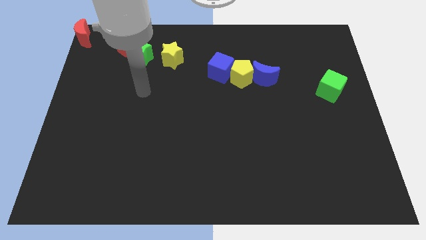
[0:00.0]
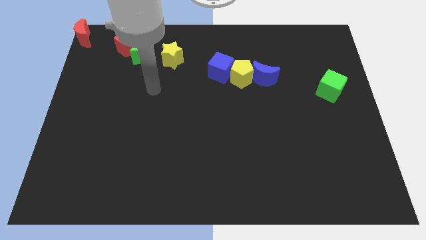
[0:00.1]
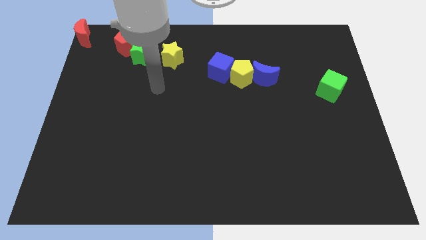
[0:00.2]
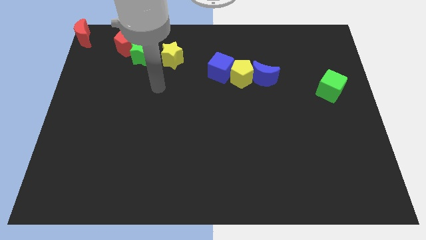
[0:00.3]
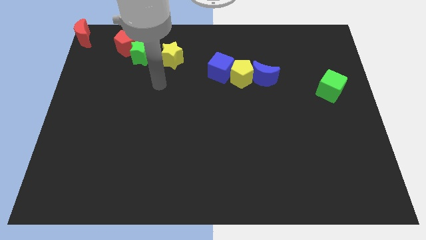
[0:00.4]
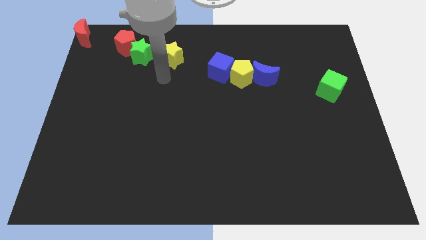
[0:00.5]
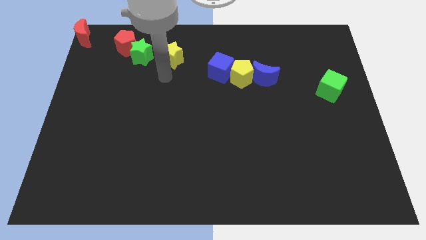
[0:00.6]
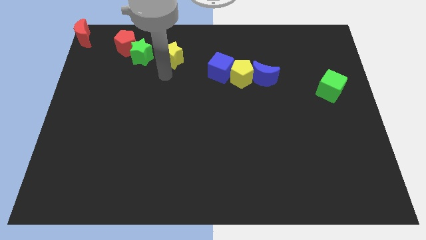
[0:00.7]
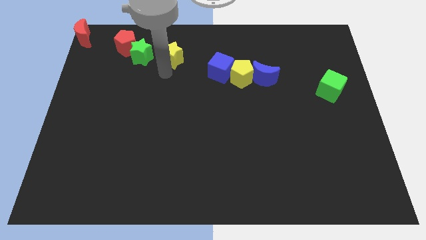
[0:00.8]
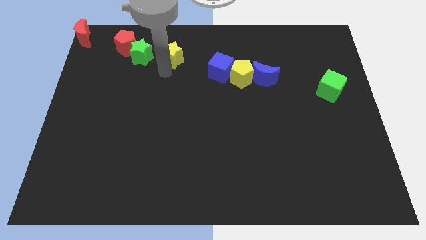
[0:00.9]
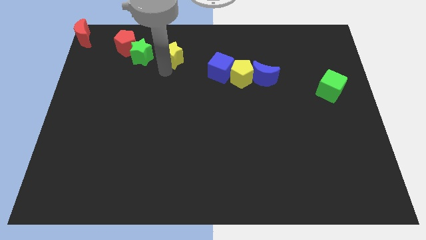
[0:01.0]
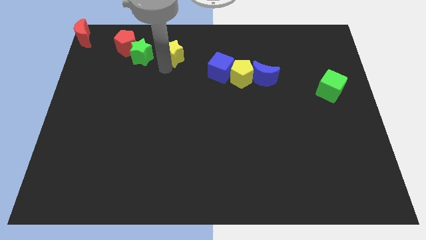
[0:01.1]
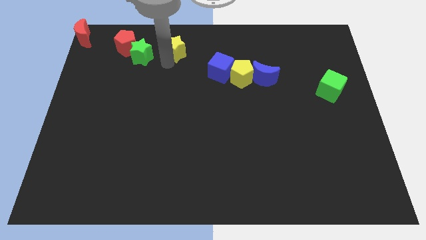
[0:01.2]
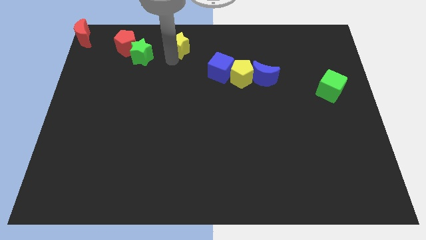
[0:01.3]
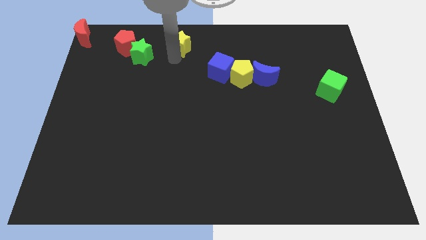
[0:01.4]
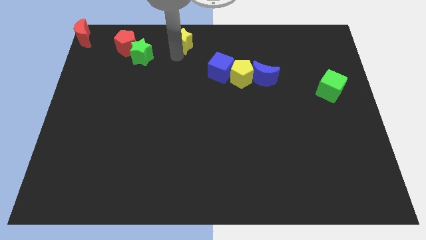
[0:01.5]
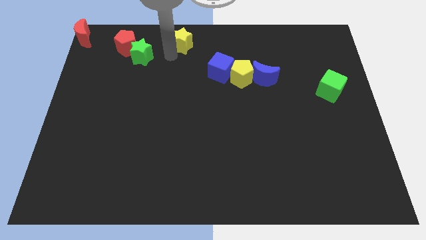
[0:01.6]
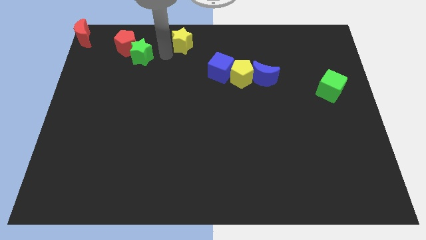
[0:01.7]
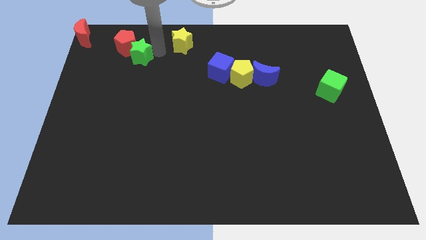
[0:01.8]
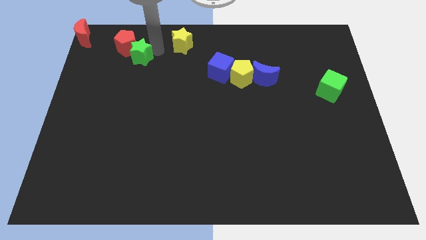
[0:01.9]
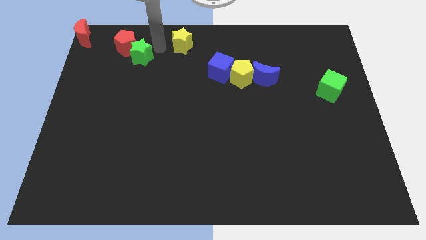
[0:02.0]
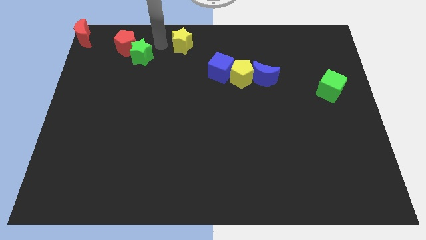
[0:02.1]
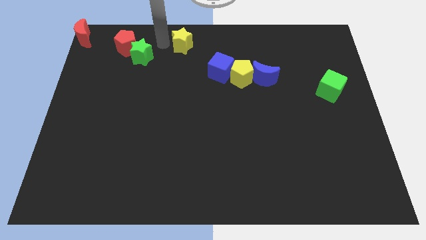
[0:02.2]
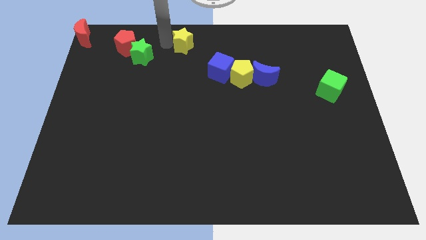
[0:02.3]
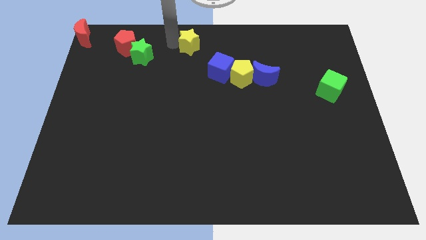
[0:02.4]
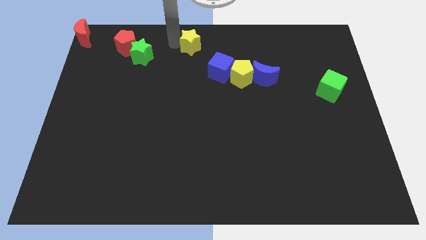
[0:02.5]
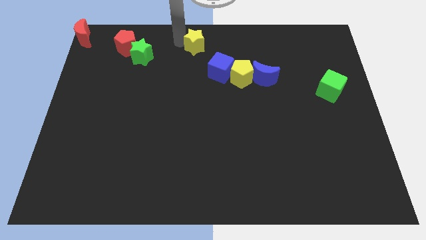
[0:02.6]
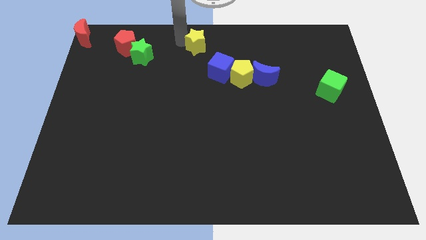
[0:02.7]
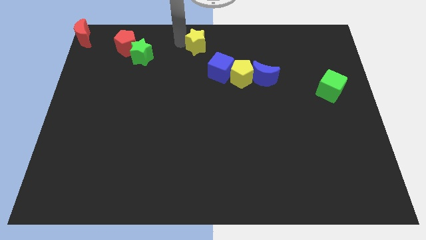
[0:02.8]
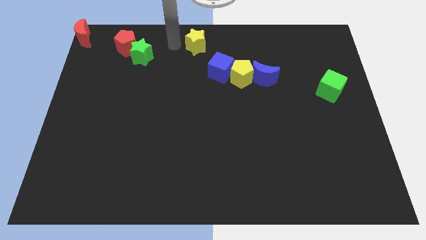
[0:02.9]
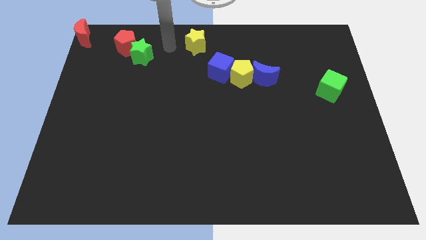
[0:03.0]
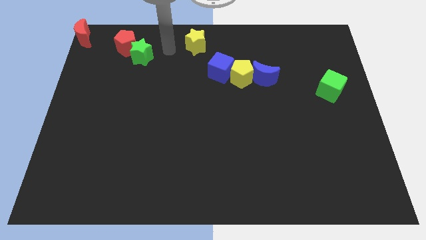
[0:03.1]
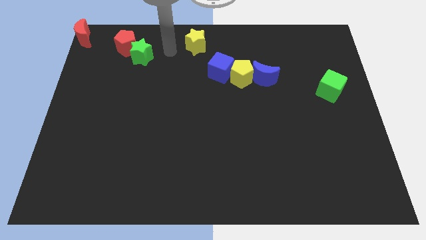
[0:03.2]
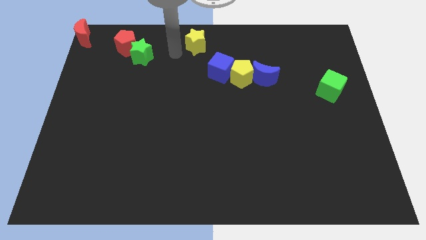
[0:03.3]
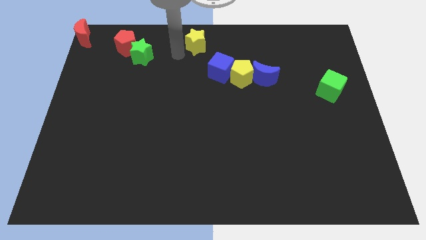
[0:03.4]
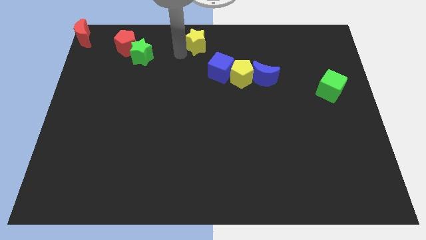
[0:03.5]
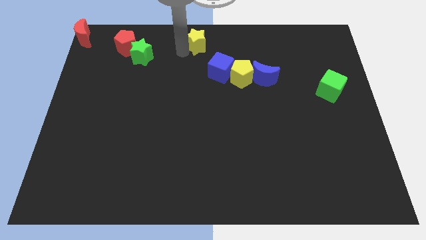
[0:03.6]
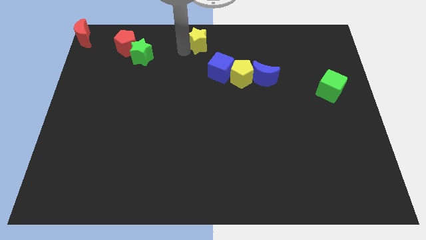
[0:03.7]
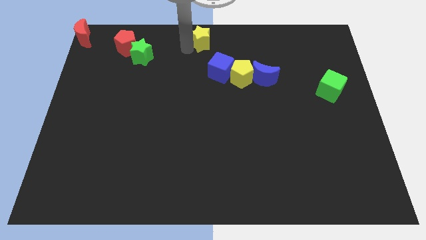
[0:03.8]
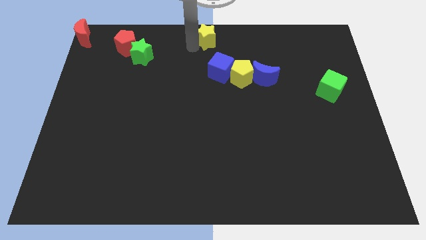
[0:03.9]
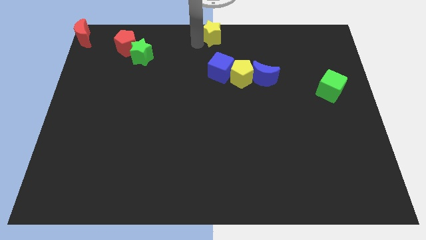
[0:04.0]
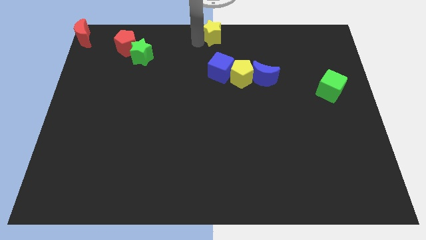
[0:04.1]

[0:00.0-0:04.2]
slide yellow star towards top center

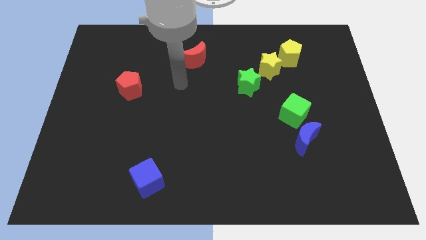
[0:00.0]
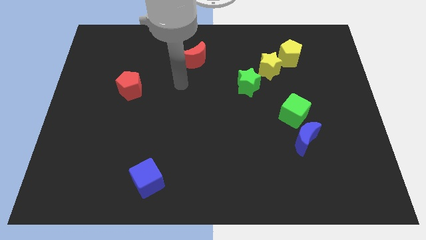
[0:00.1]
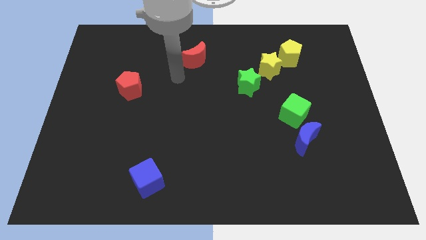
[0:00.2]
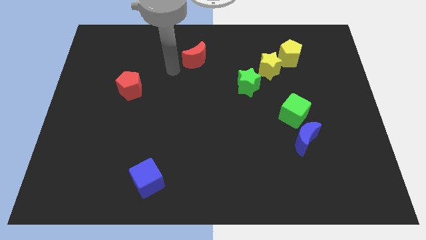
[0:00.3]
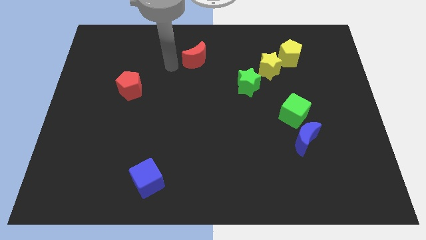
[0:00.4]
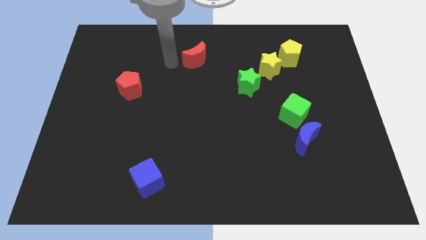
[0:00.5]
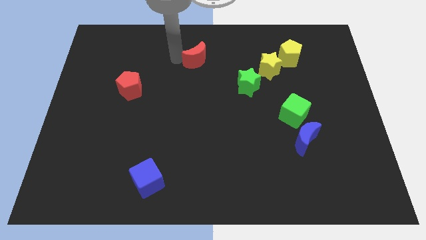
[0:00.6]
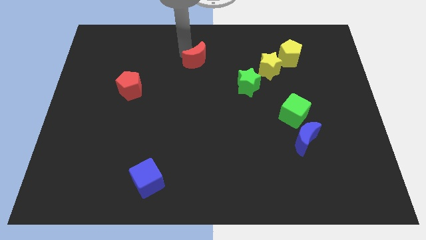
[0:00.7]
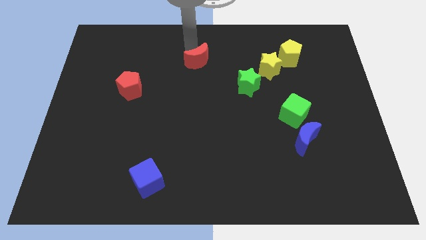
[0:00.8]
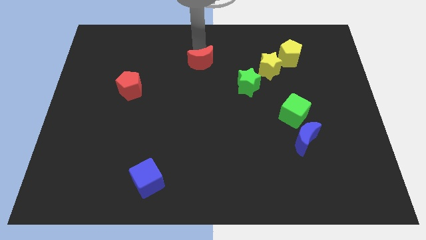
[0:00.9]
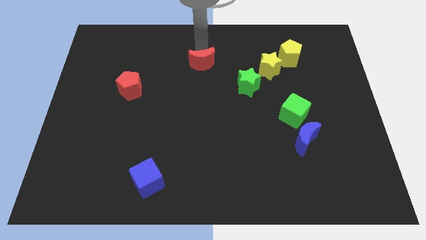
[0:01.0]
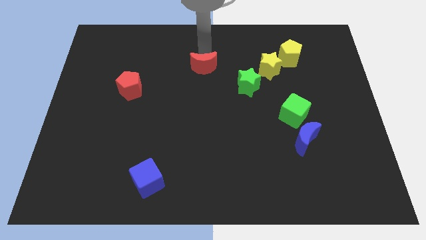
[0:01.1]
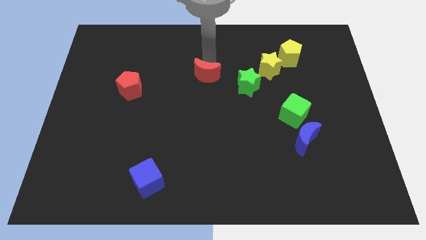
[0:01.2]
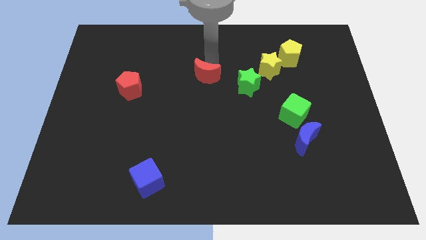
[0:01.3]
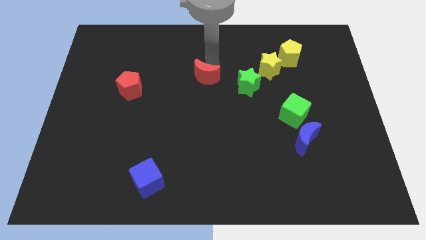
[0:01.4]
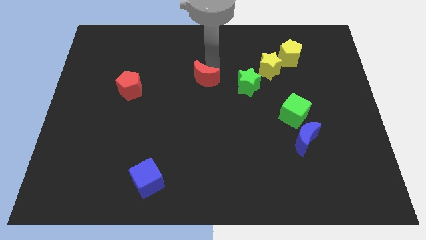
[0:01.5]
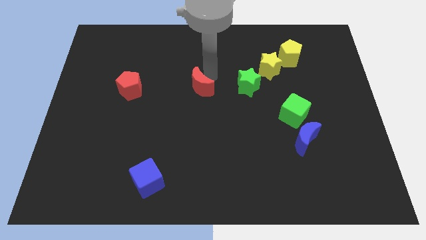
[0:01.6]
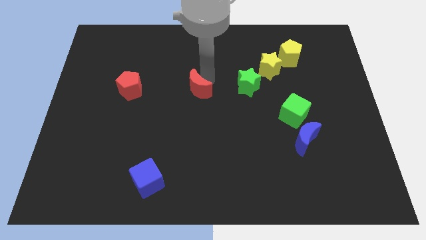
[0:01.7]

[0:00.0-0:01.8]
push the red crescent to the left of the green star

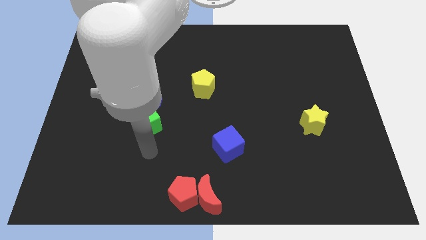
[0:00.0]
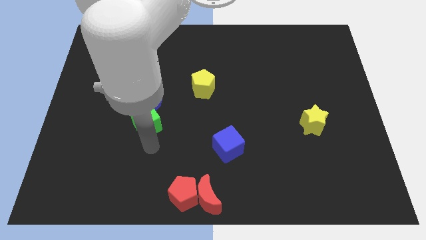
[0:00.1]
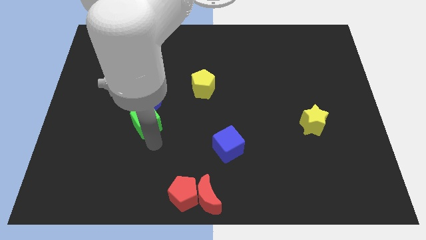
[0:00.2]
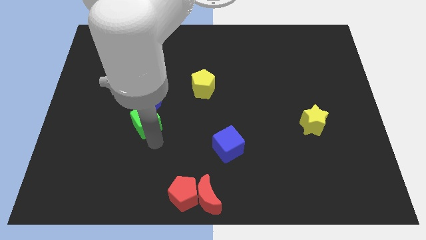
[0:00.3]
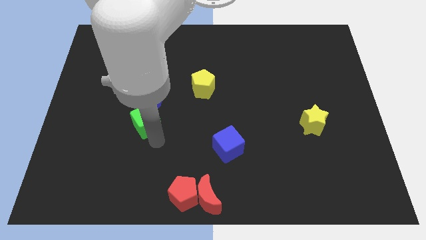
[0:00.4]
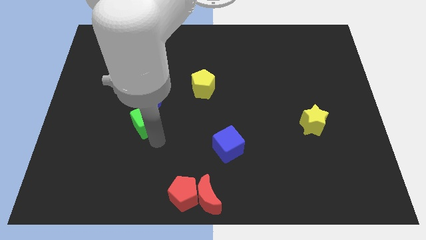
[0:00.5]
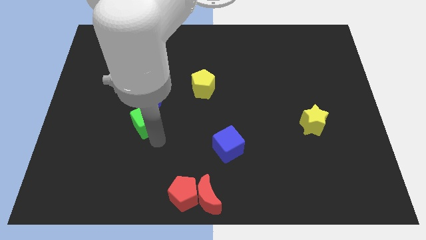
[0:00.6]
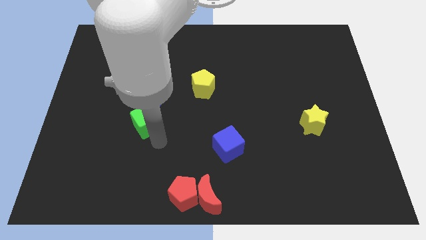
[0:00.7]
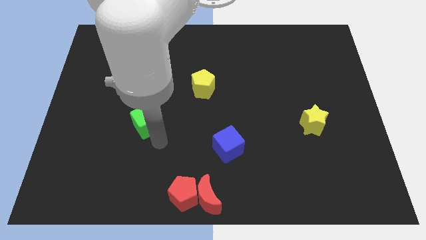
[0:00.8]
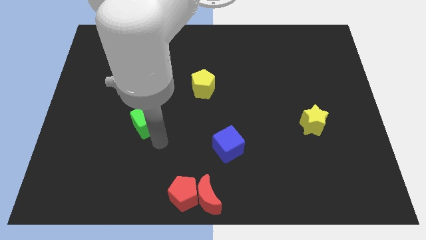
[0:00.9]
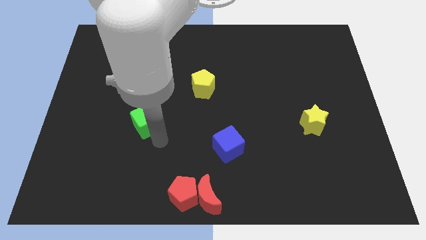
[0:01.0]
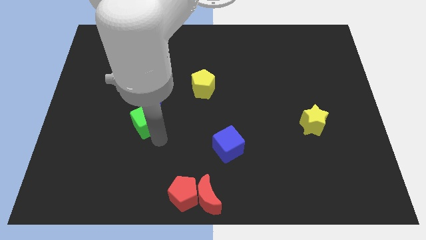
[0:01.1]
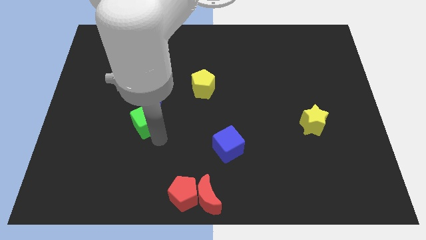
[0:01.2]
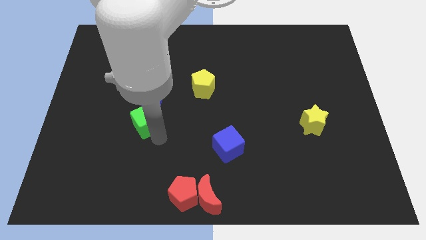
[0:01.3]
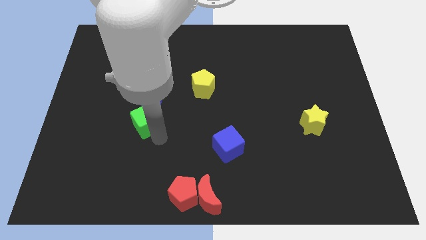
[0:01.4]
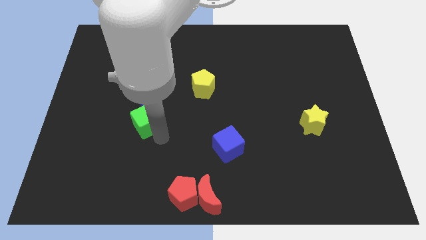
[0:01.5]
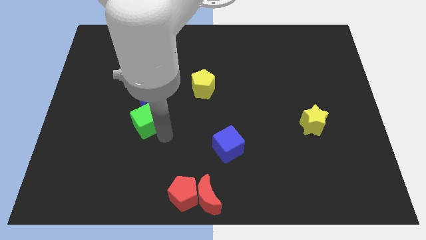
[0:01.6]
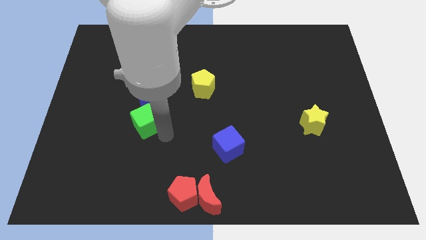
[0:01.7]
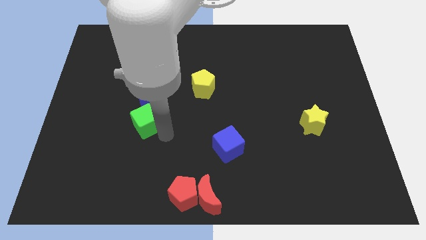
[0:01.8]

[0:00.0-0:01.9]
place the arm towards the right side of the green cube

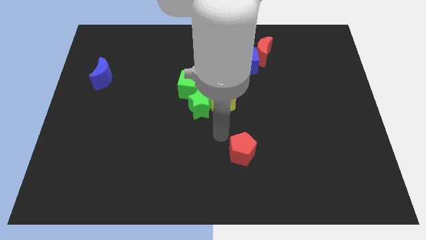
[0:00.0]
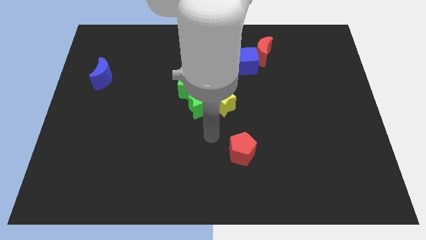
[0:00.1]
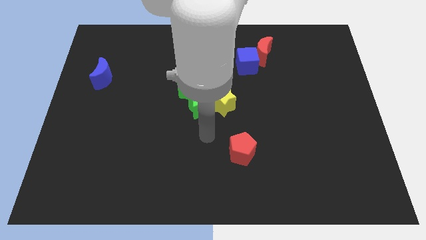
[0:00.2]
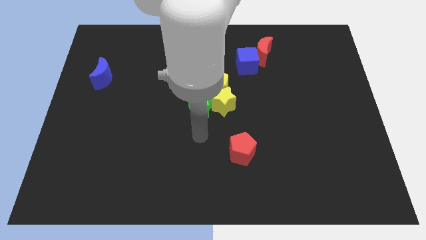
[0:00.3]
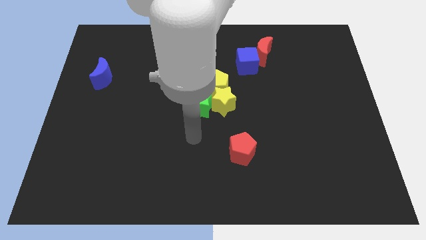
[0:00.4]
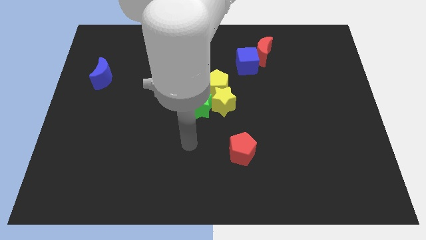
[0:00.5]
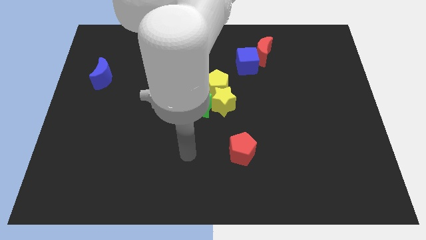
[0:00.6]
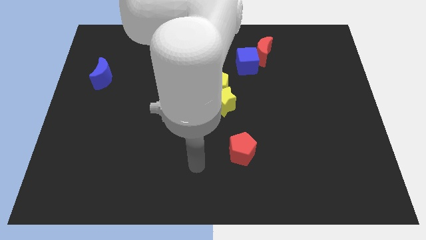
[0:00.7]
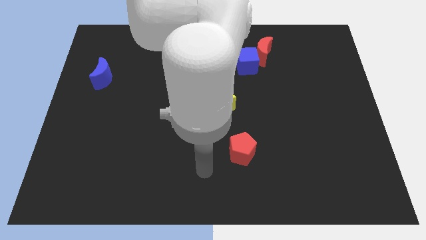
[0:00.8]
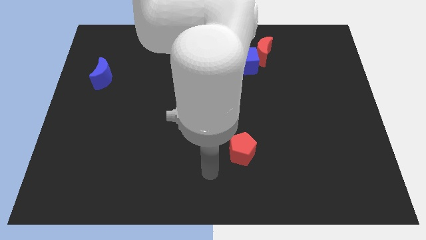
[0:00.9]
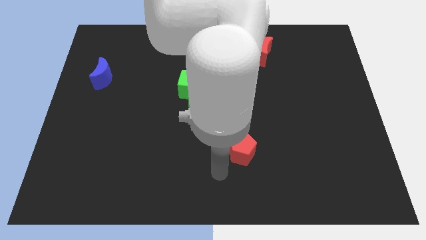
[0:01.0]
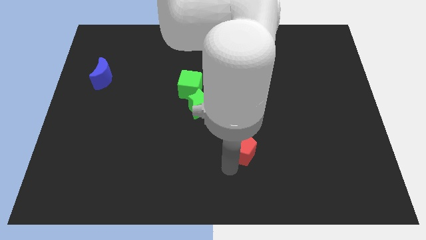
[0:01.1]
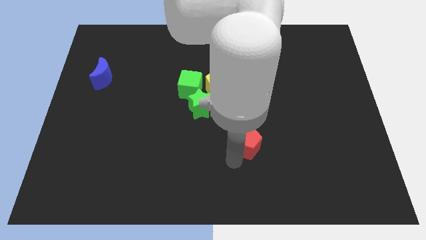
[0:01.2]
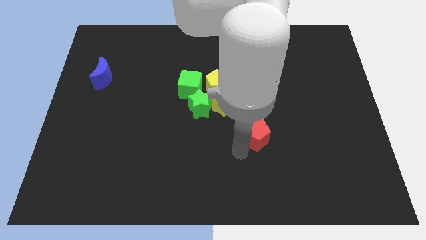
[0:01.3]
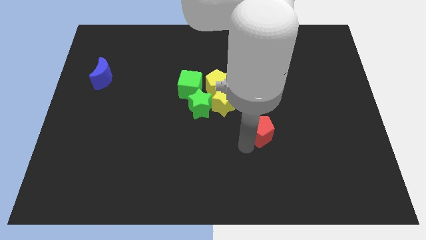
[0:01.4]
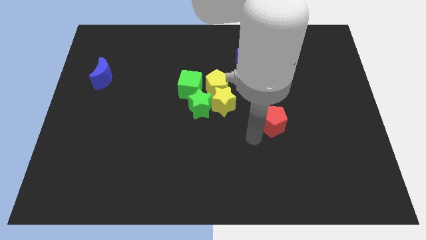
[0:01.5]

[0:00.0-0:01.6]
slide the red pentagon towards the right

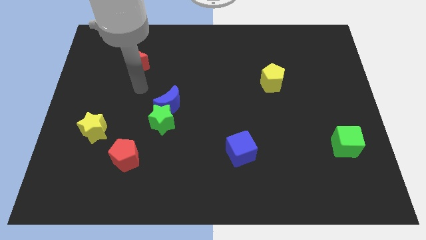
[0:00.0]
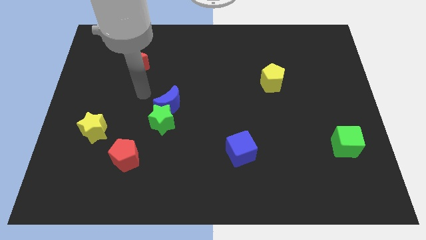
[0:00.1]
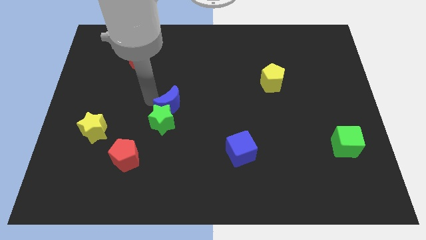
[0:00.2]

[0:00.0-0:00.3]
point your hand close to the blue crescent
